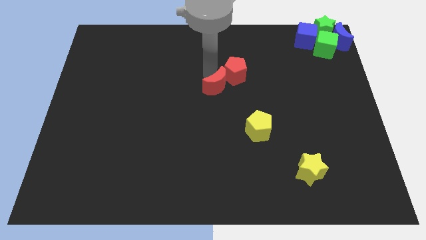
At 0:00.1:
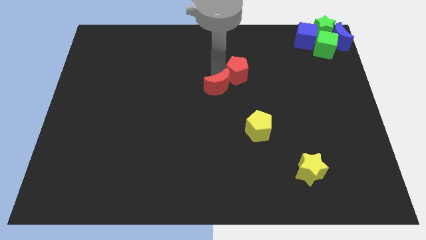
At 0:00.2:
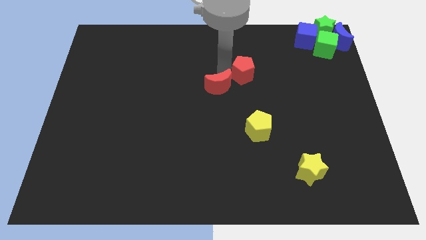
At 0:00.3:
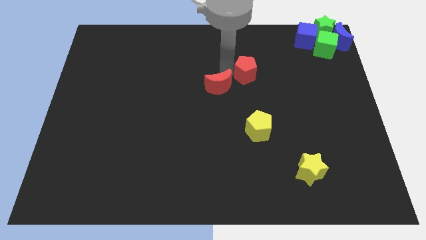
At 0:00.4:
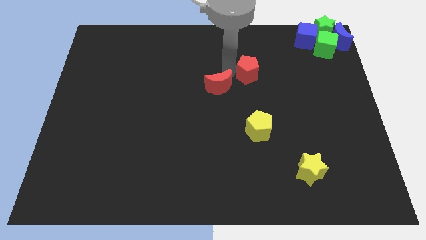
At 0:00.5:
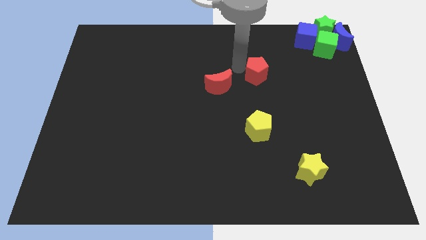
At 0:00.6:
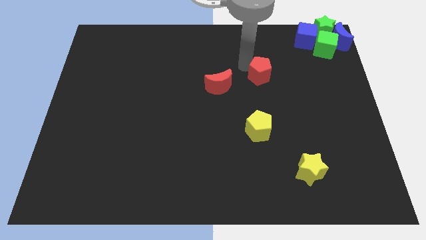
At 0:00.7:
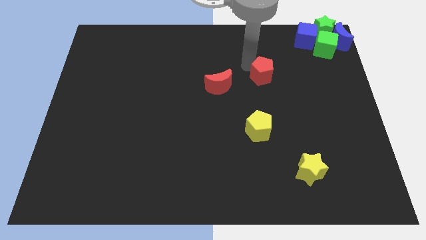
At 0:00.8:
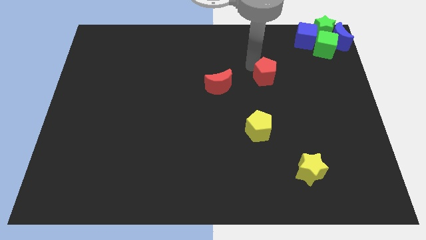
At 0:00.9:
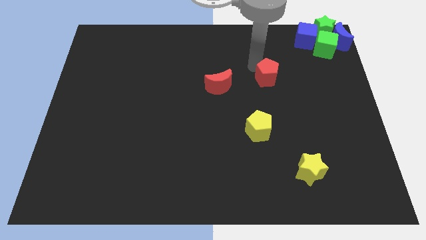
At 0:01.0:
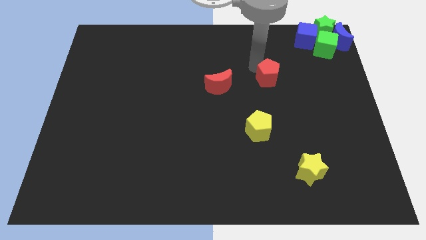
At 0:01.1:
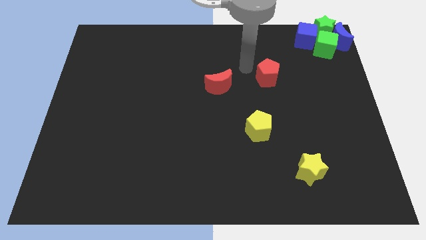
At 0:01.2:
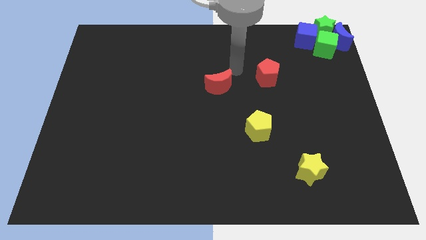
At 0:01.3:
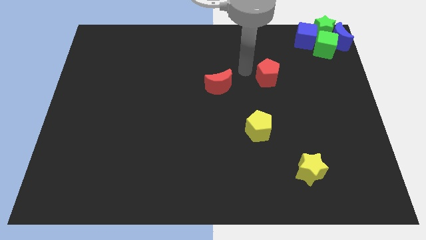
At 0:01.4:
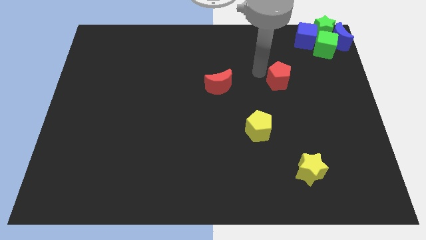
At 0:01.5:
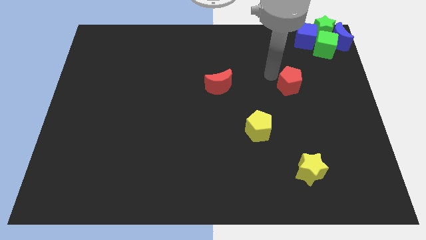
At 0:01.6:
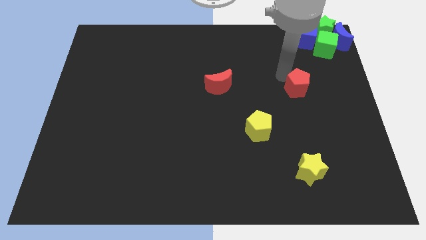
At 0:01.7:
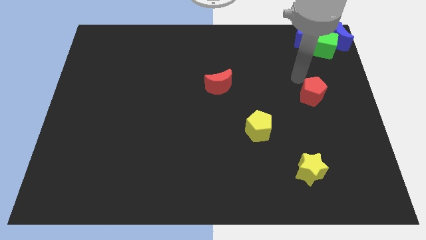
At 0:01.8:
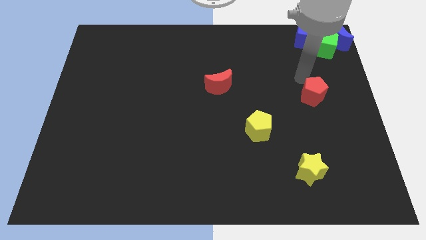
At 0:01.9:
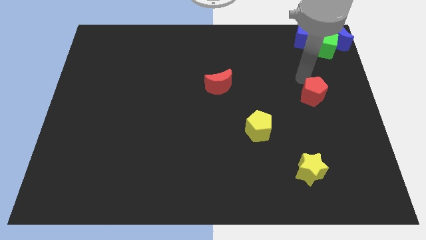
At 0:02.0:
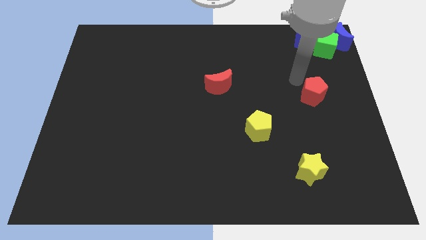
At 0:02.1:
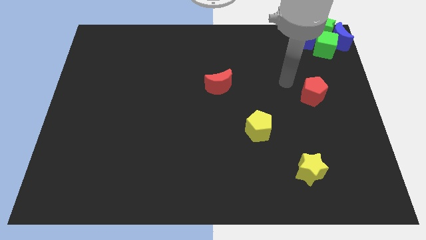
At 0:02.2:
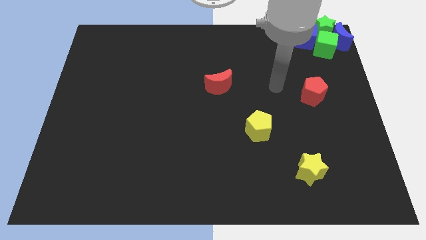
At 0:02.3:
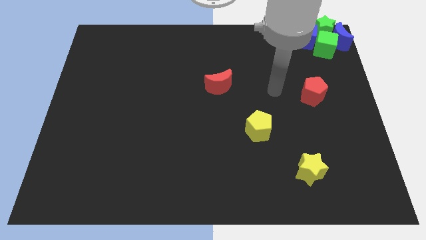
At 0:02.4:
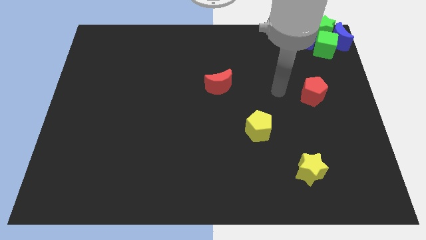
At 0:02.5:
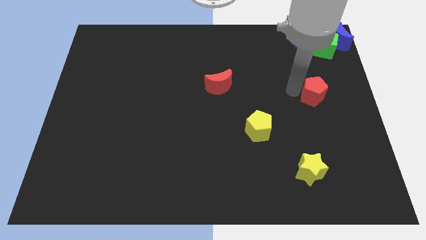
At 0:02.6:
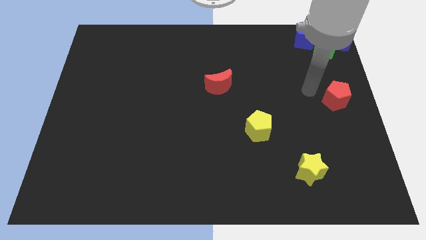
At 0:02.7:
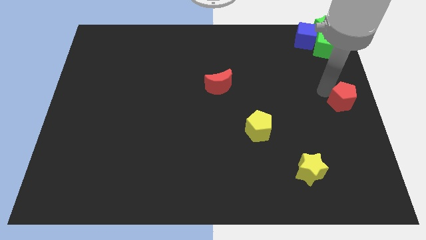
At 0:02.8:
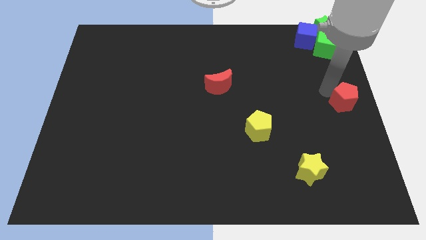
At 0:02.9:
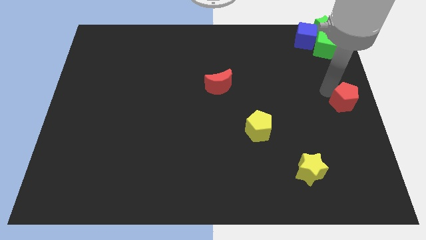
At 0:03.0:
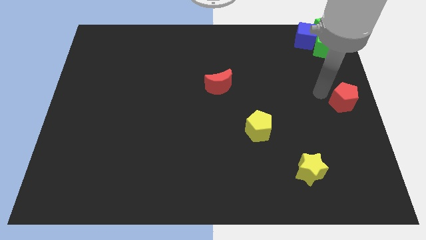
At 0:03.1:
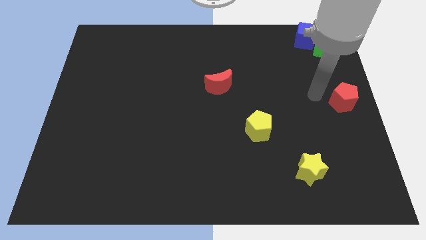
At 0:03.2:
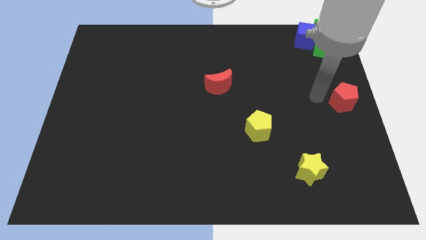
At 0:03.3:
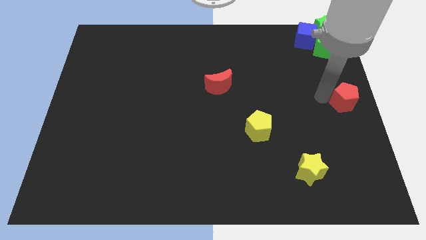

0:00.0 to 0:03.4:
separate red pentagon from the red moon

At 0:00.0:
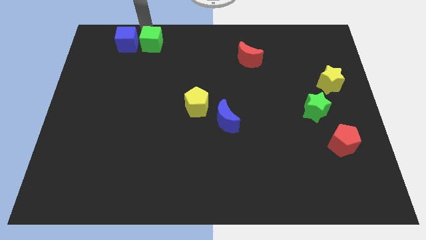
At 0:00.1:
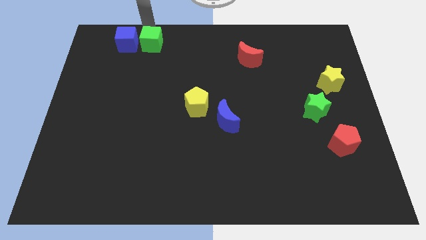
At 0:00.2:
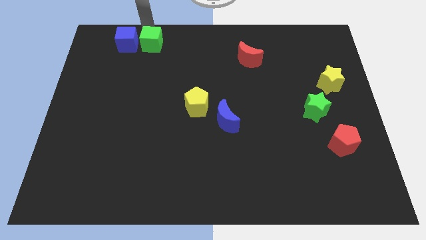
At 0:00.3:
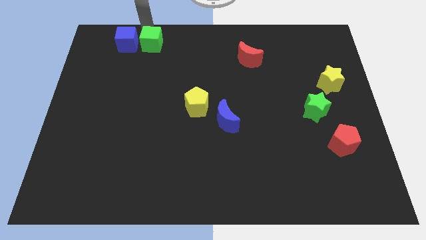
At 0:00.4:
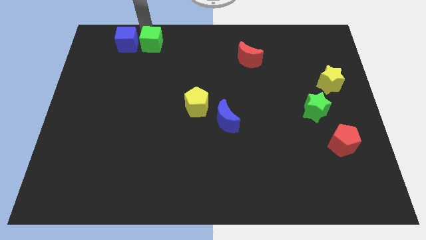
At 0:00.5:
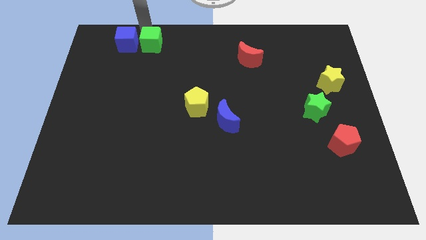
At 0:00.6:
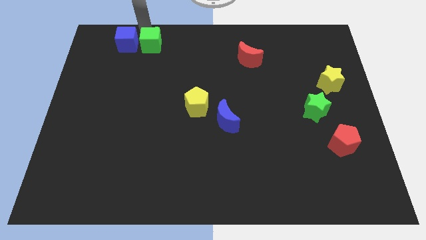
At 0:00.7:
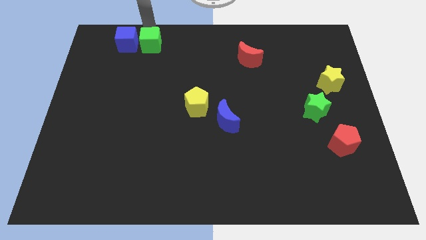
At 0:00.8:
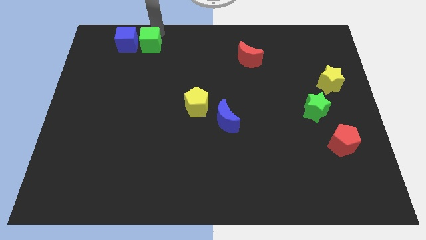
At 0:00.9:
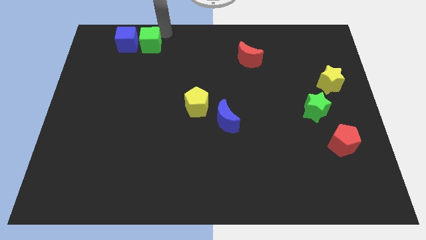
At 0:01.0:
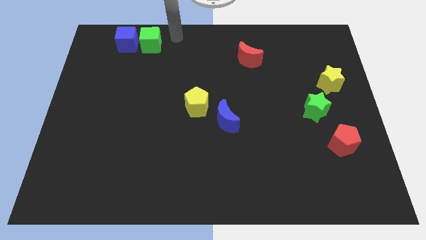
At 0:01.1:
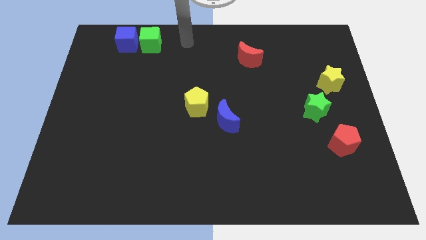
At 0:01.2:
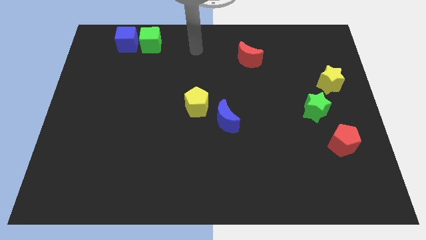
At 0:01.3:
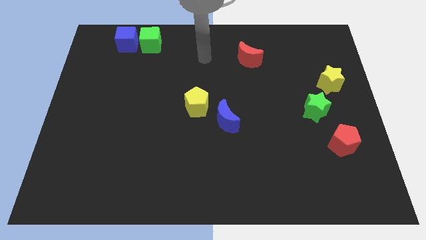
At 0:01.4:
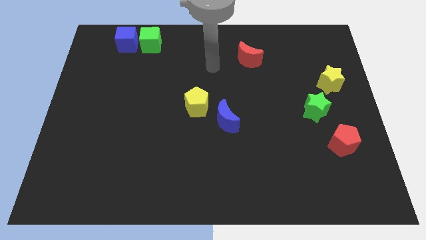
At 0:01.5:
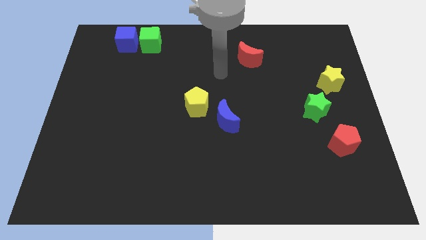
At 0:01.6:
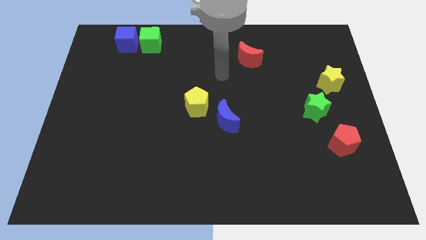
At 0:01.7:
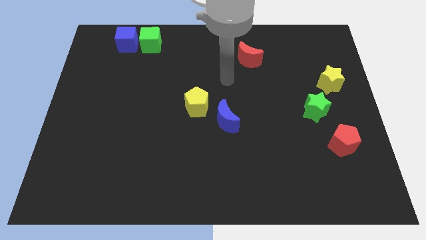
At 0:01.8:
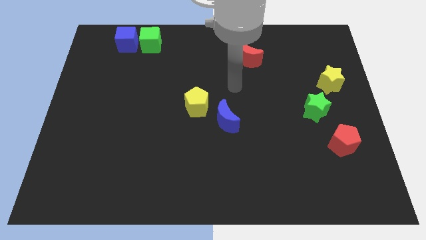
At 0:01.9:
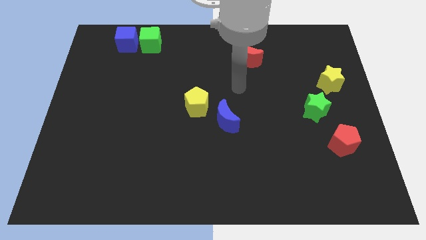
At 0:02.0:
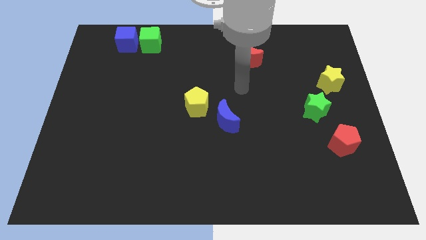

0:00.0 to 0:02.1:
move your arm away from green cube

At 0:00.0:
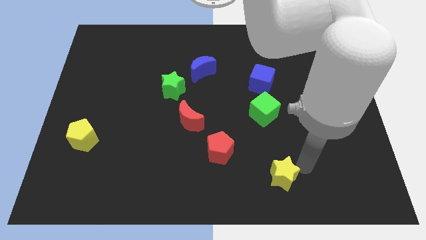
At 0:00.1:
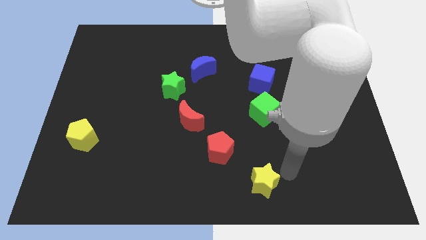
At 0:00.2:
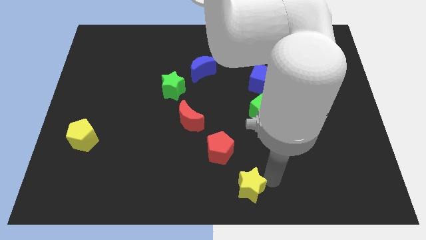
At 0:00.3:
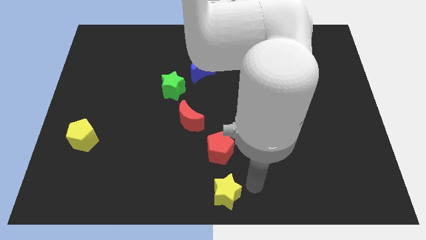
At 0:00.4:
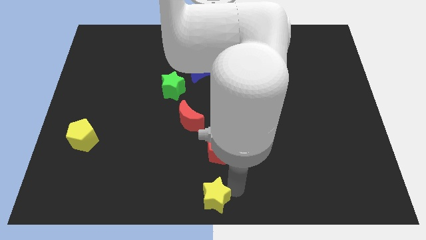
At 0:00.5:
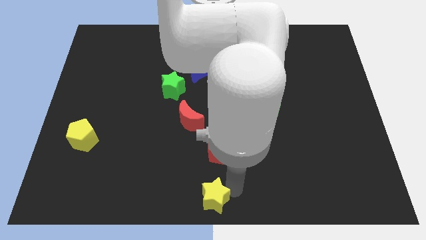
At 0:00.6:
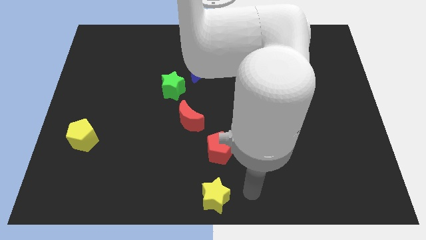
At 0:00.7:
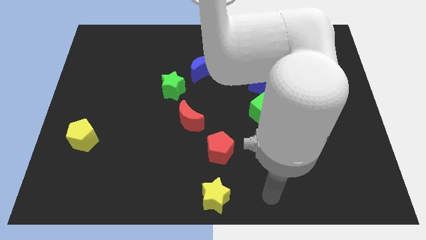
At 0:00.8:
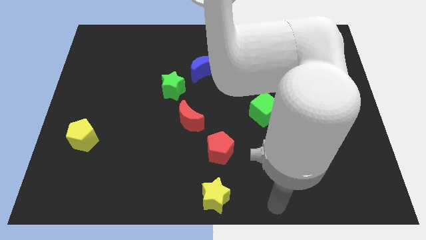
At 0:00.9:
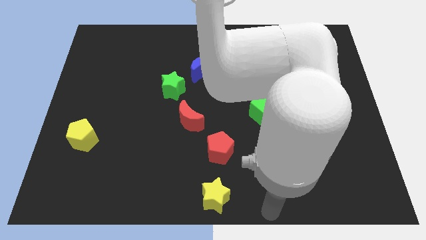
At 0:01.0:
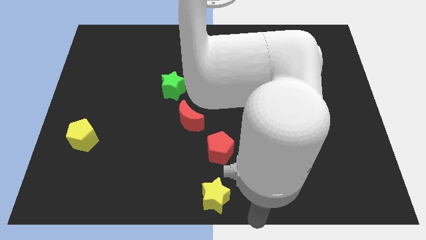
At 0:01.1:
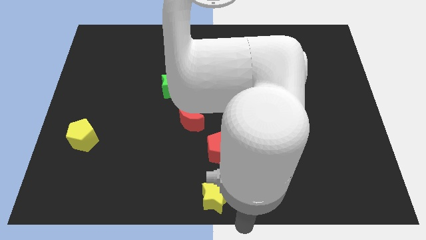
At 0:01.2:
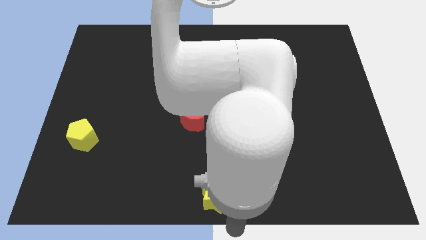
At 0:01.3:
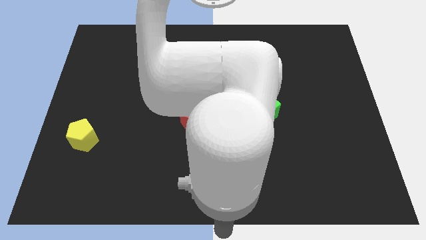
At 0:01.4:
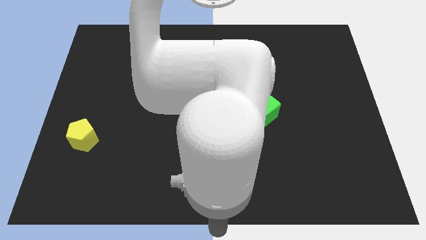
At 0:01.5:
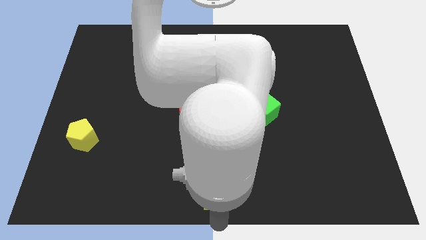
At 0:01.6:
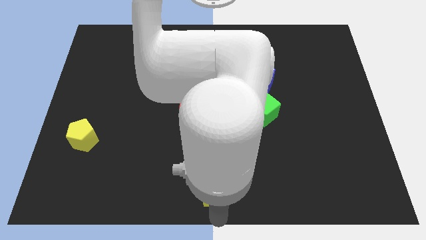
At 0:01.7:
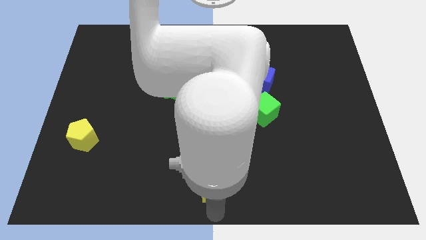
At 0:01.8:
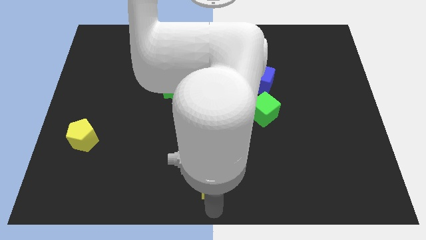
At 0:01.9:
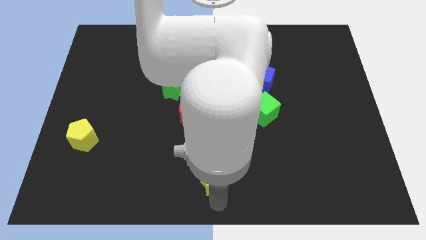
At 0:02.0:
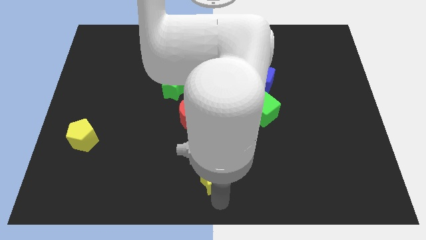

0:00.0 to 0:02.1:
place the yellow star to the bottom of red pentagon

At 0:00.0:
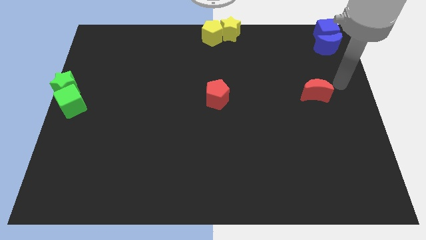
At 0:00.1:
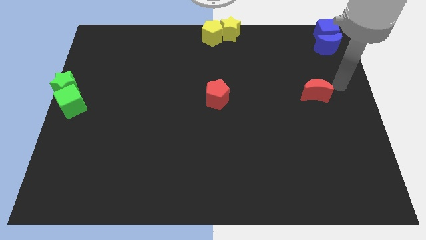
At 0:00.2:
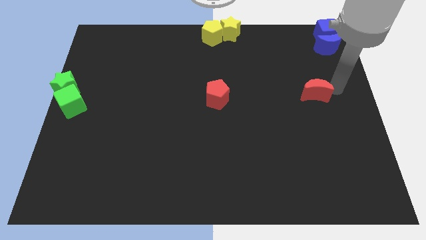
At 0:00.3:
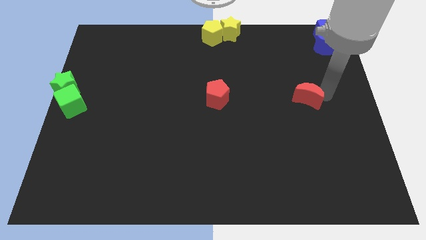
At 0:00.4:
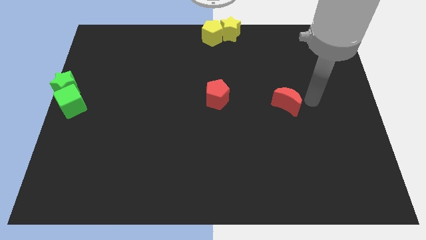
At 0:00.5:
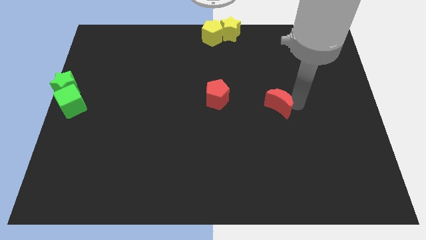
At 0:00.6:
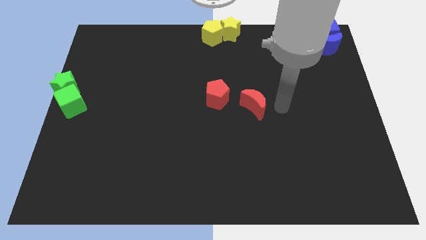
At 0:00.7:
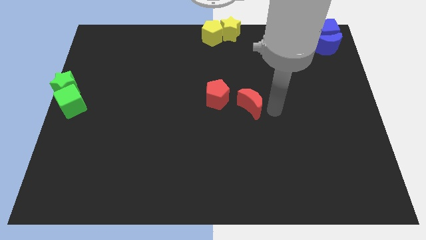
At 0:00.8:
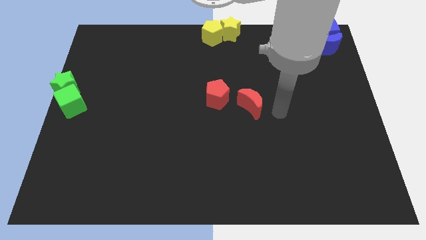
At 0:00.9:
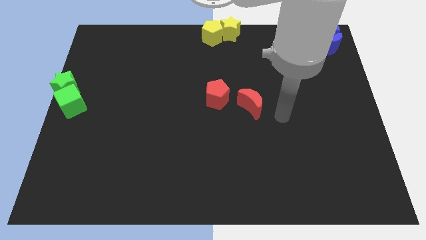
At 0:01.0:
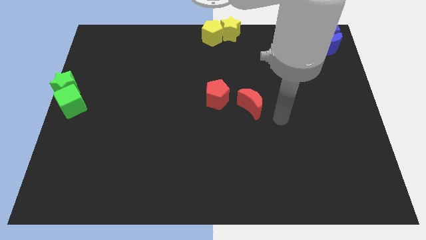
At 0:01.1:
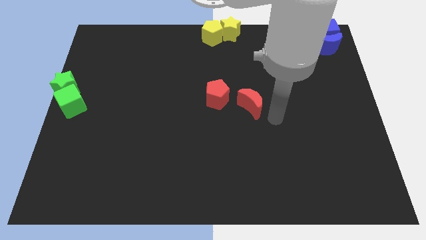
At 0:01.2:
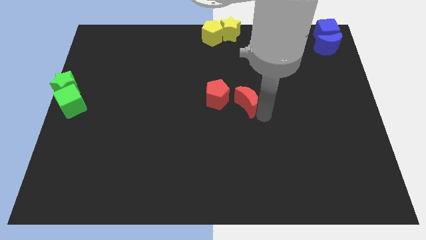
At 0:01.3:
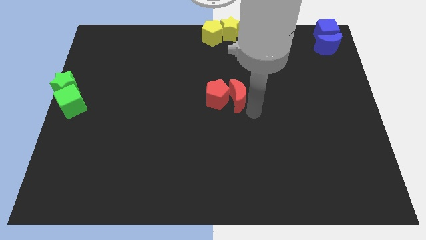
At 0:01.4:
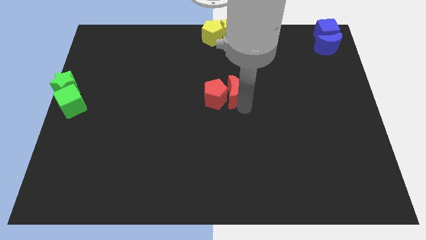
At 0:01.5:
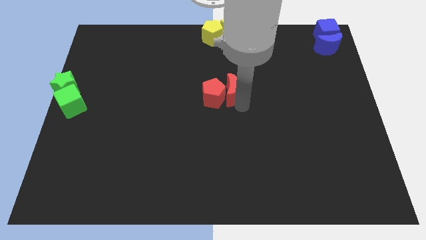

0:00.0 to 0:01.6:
place the red moon right to the red pentagon
